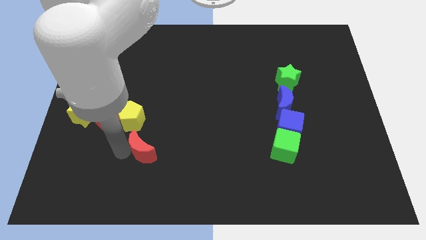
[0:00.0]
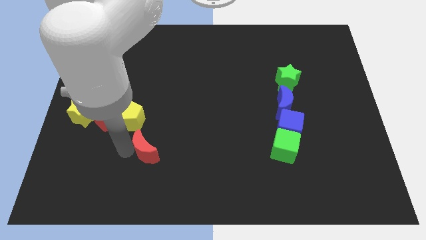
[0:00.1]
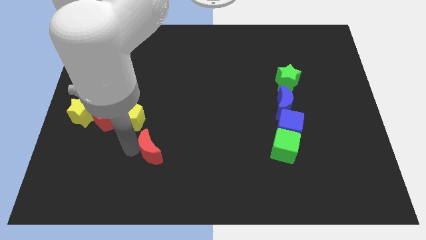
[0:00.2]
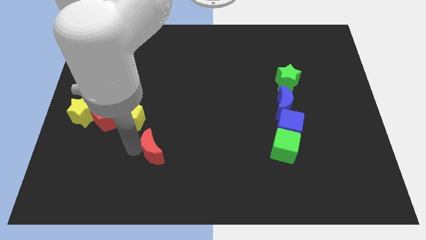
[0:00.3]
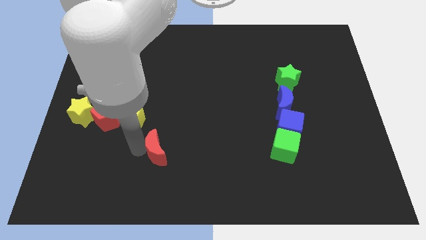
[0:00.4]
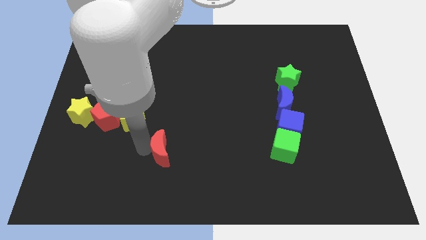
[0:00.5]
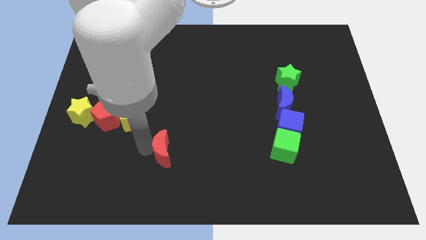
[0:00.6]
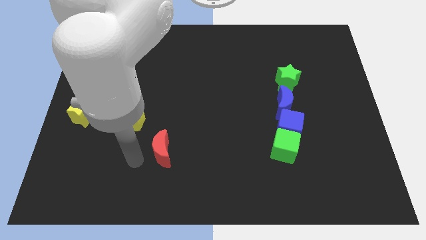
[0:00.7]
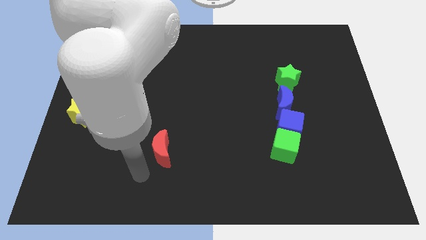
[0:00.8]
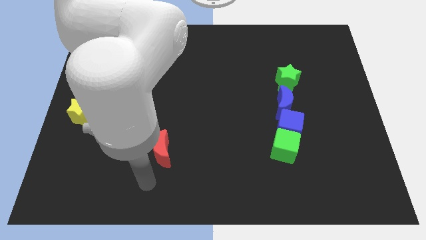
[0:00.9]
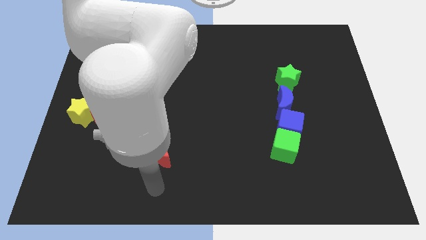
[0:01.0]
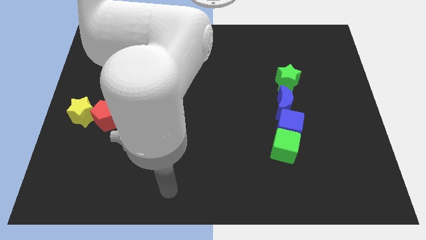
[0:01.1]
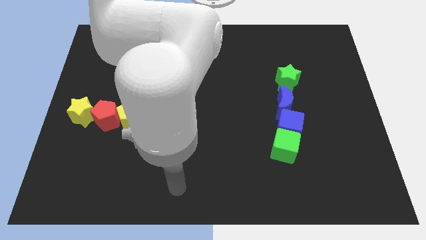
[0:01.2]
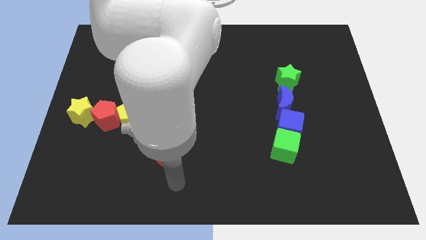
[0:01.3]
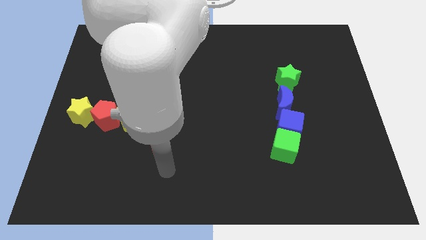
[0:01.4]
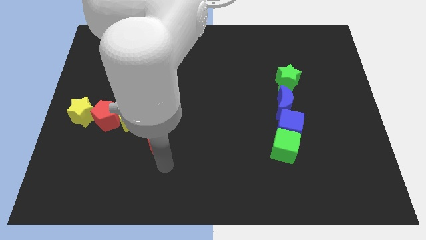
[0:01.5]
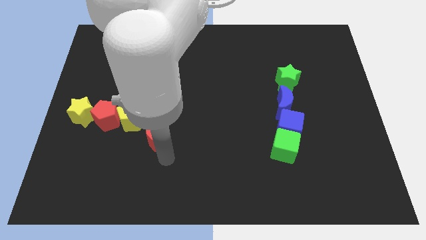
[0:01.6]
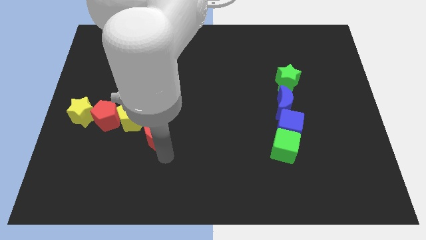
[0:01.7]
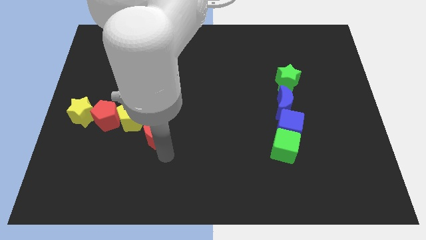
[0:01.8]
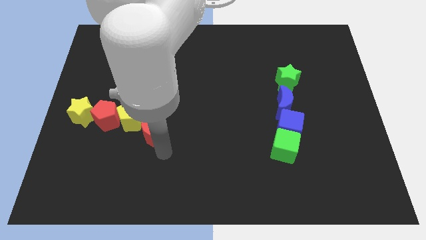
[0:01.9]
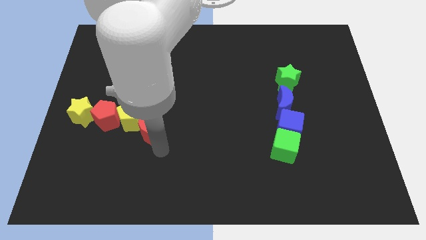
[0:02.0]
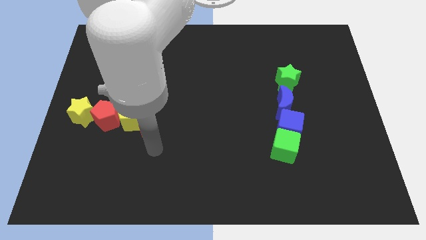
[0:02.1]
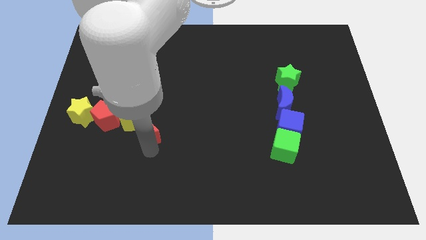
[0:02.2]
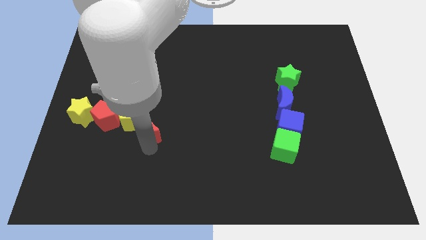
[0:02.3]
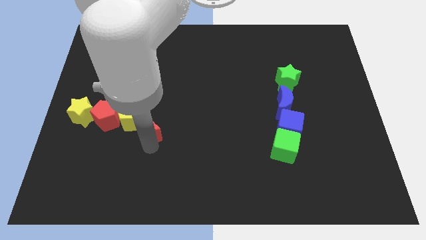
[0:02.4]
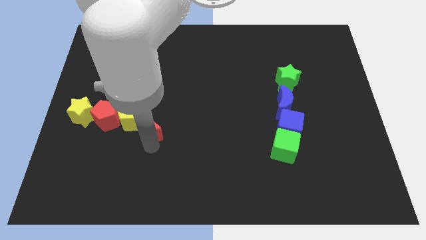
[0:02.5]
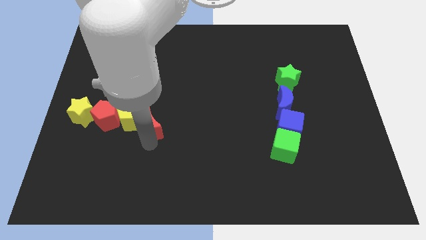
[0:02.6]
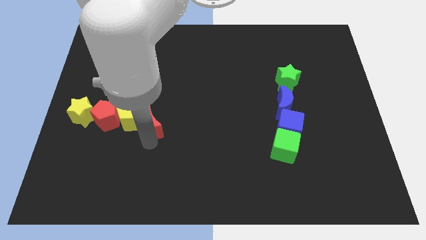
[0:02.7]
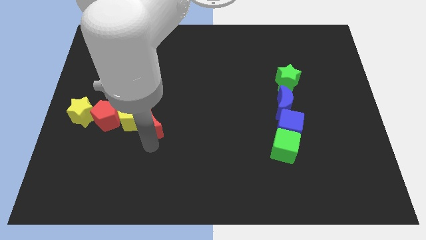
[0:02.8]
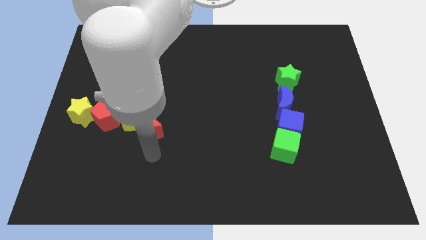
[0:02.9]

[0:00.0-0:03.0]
place the red crescent left to the yellow pentagon

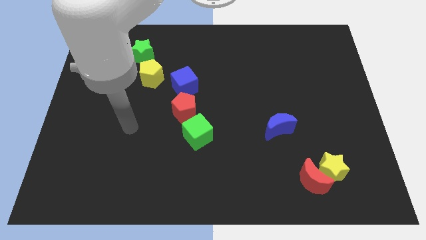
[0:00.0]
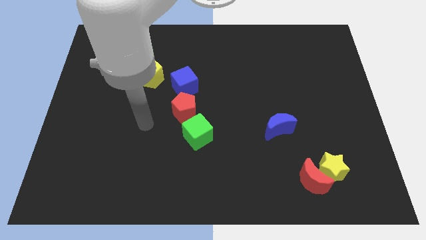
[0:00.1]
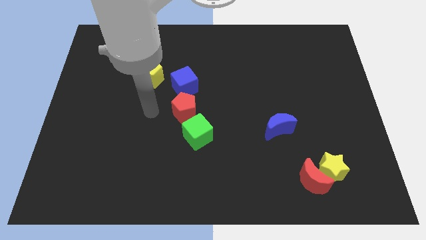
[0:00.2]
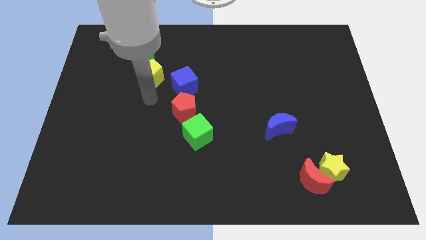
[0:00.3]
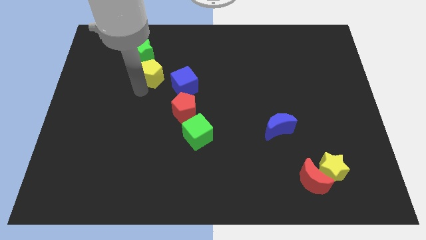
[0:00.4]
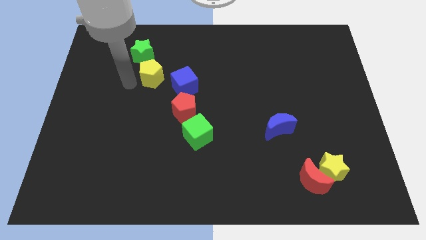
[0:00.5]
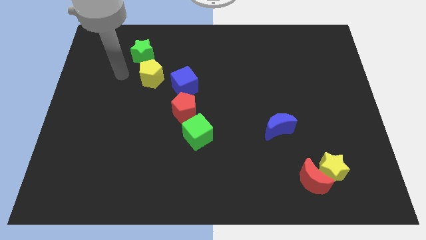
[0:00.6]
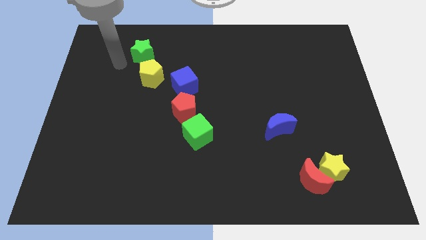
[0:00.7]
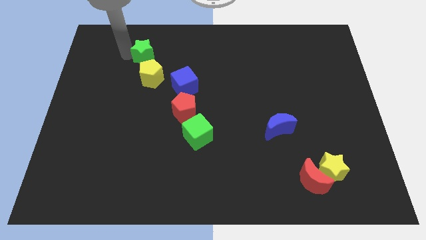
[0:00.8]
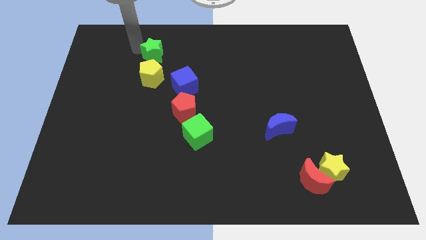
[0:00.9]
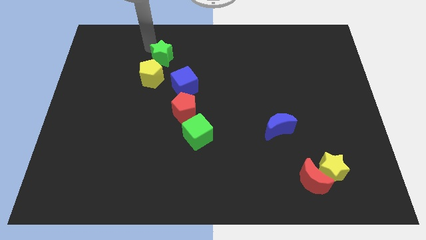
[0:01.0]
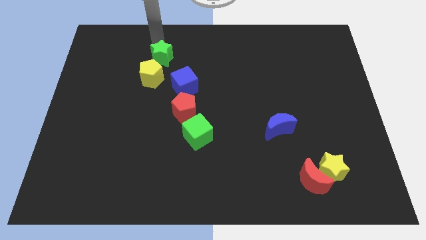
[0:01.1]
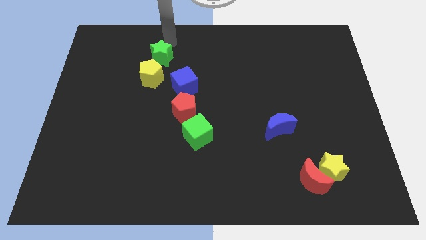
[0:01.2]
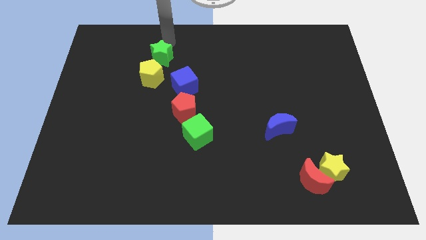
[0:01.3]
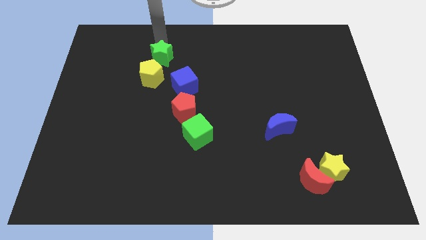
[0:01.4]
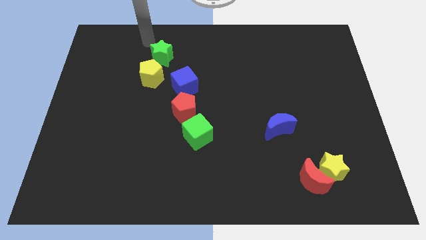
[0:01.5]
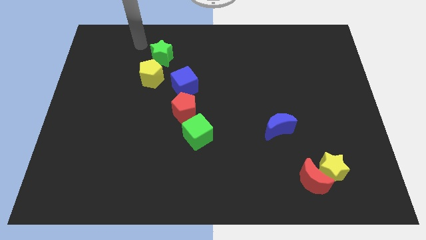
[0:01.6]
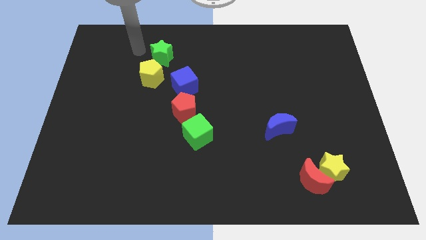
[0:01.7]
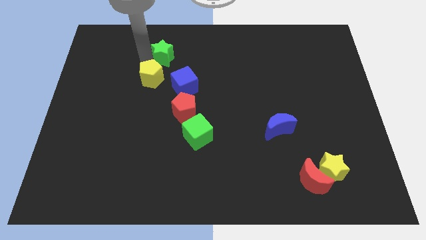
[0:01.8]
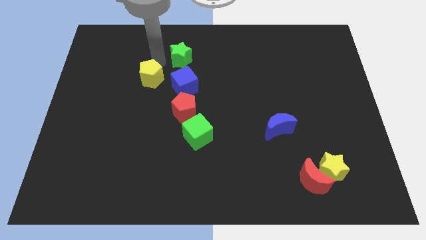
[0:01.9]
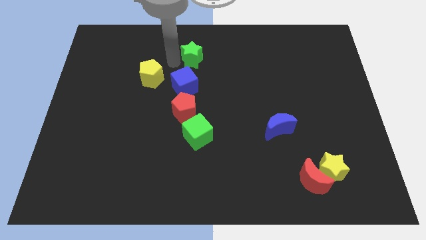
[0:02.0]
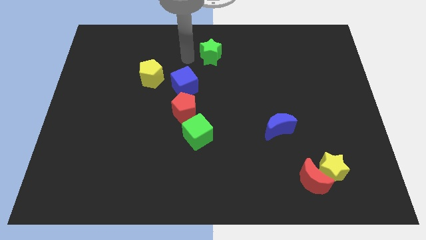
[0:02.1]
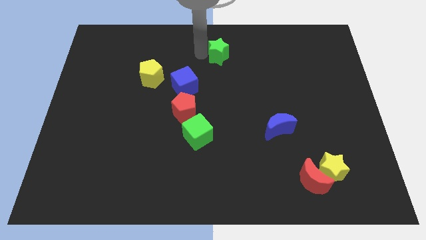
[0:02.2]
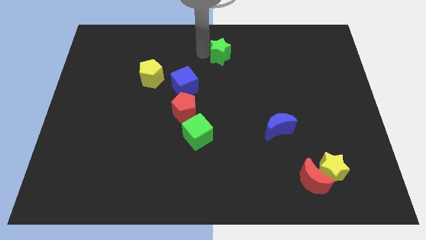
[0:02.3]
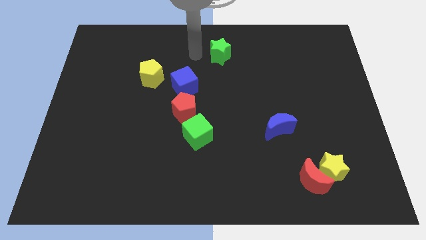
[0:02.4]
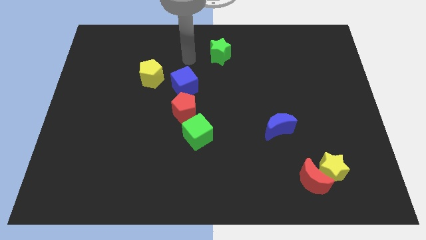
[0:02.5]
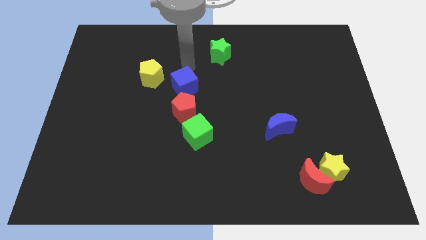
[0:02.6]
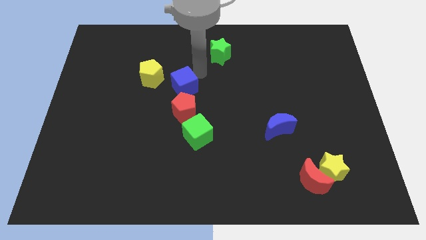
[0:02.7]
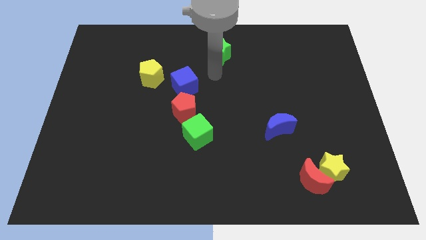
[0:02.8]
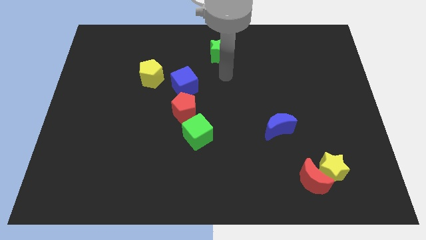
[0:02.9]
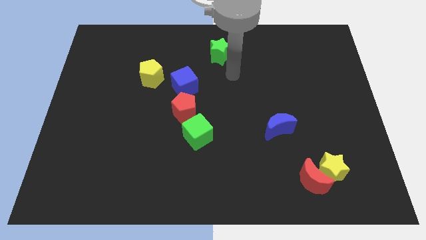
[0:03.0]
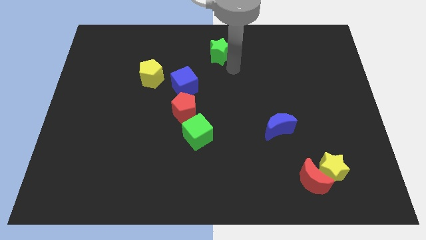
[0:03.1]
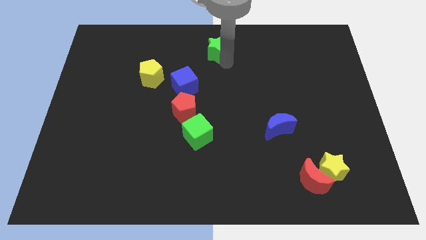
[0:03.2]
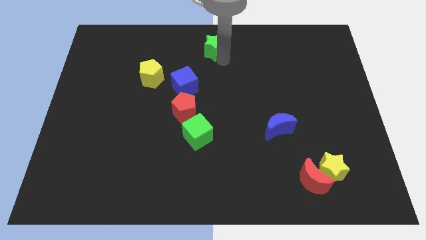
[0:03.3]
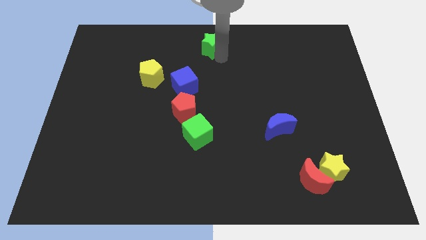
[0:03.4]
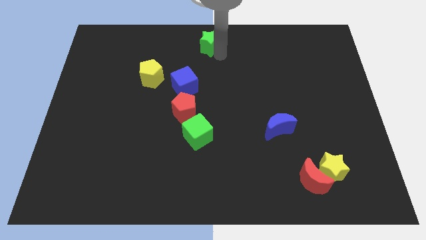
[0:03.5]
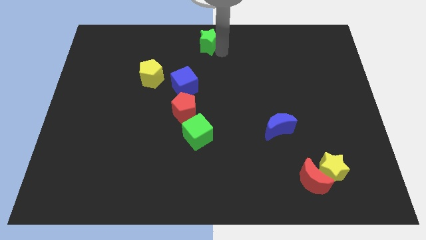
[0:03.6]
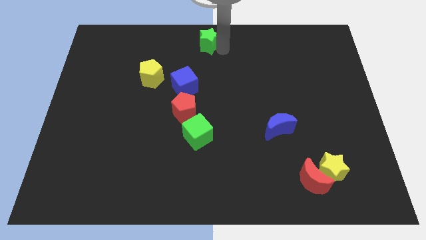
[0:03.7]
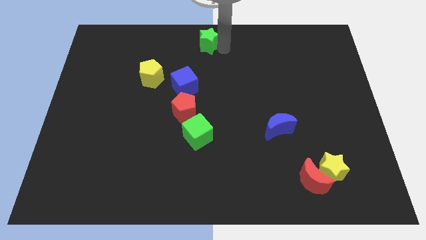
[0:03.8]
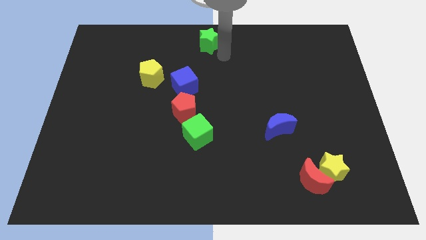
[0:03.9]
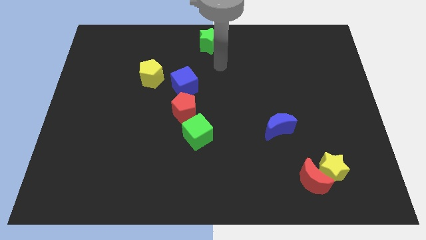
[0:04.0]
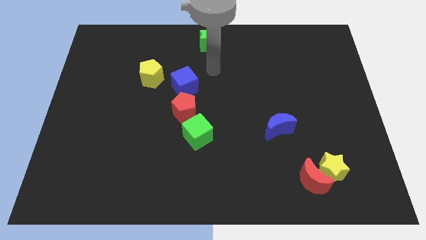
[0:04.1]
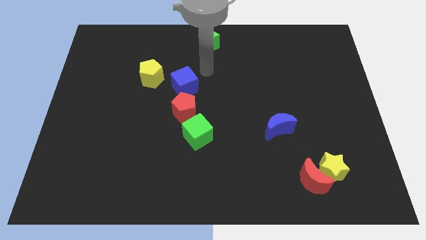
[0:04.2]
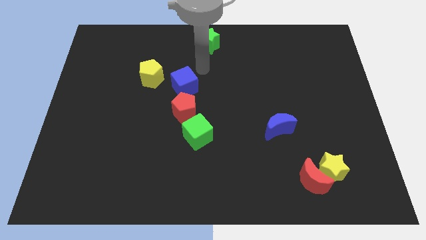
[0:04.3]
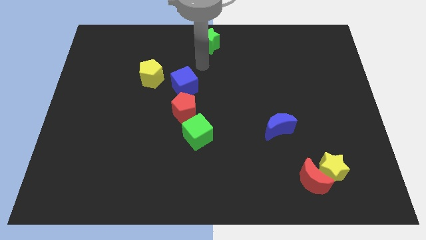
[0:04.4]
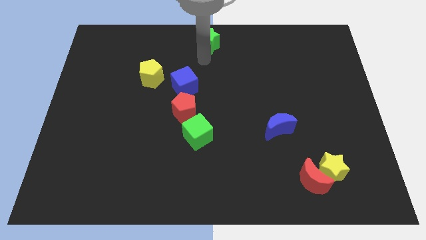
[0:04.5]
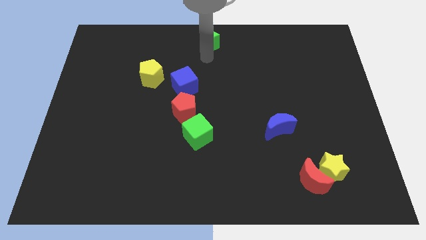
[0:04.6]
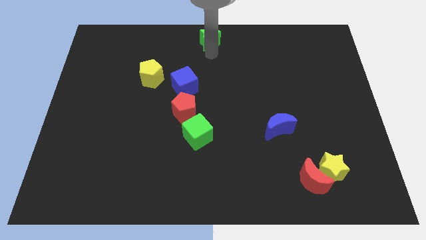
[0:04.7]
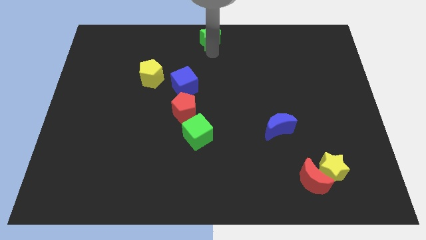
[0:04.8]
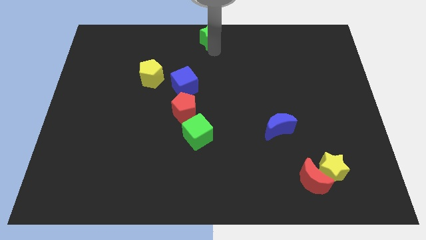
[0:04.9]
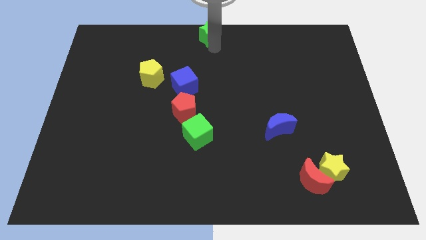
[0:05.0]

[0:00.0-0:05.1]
push the green star to the top center of the board

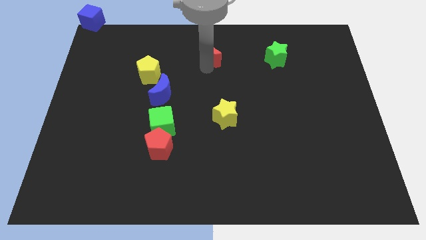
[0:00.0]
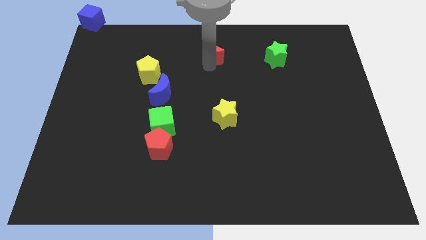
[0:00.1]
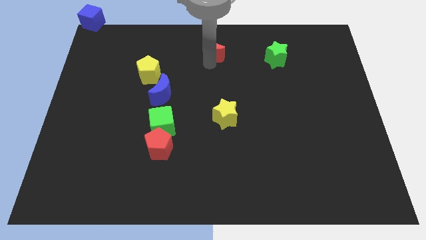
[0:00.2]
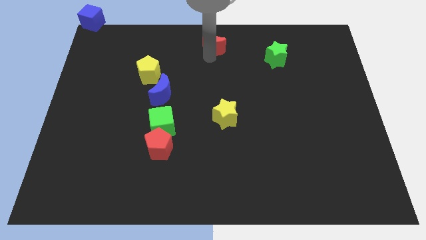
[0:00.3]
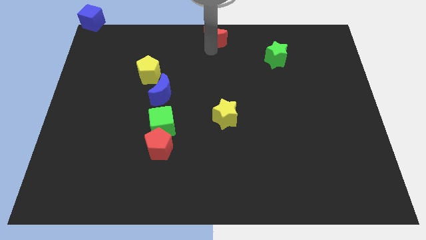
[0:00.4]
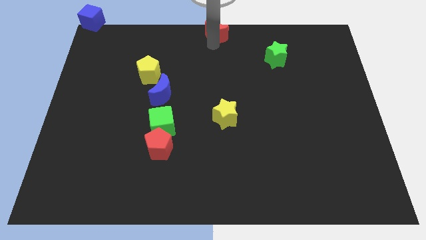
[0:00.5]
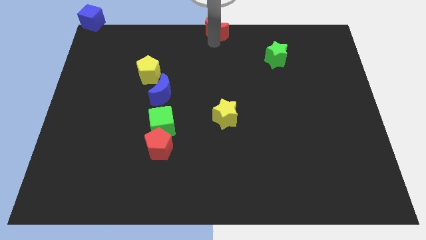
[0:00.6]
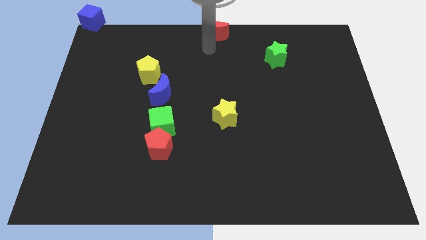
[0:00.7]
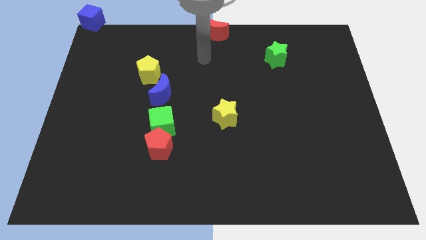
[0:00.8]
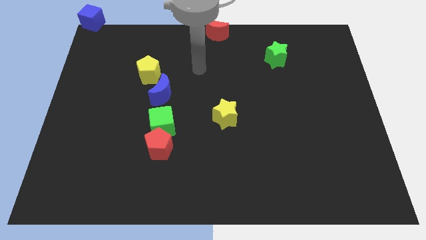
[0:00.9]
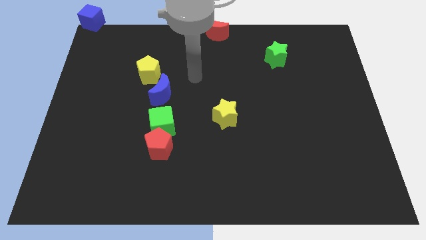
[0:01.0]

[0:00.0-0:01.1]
move red moon to the top center of the board
